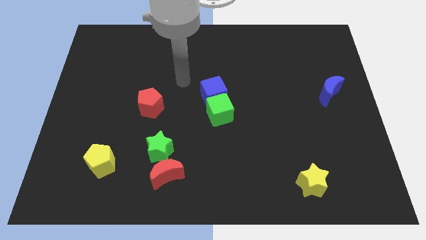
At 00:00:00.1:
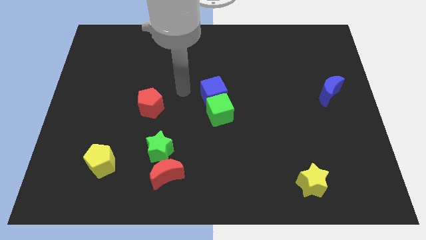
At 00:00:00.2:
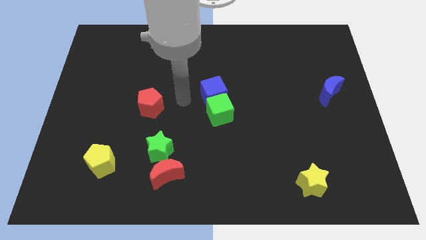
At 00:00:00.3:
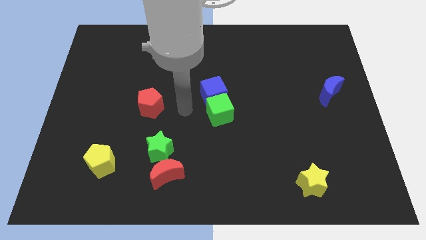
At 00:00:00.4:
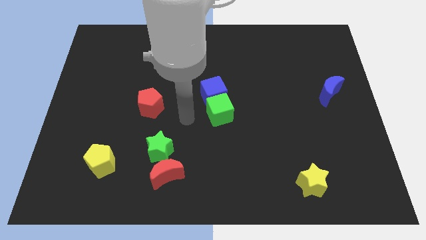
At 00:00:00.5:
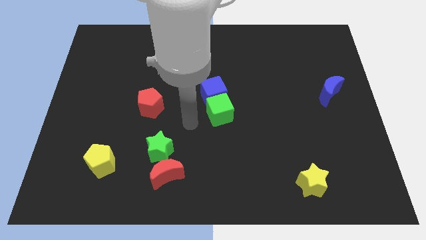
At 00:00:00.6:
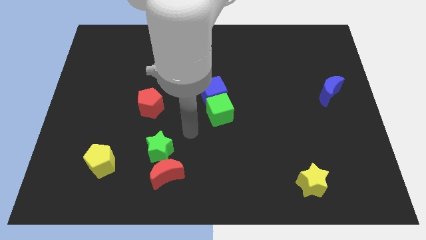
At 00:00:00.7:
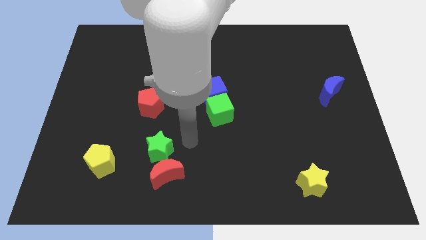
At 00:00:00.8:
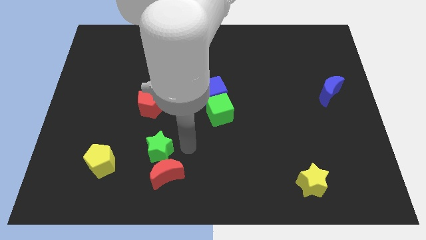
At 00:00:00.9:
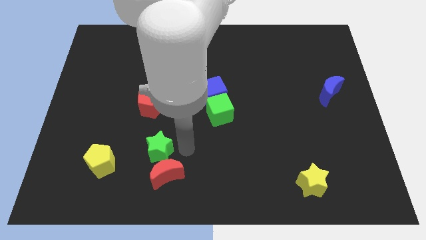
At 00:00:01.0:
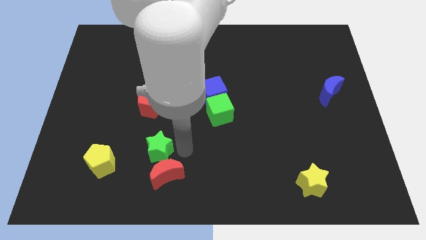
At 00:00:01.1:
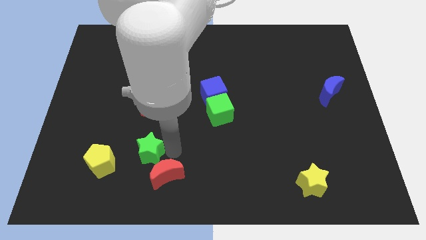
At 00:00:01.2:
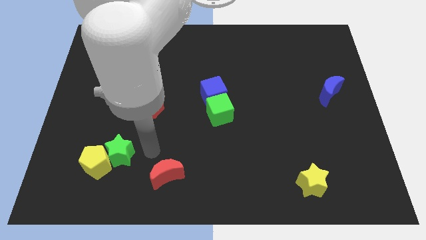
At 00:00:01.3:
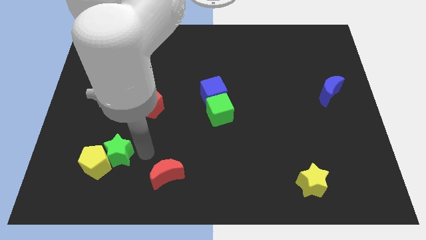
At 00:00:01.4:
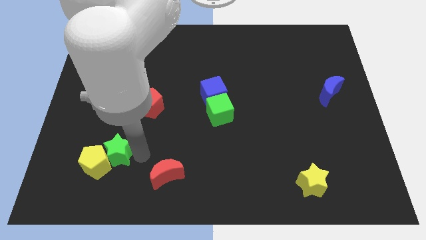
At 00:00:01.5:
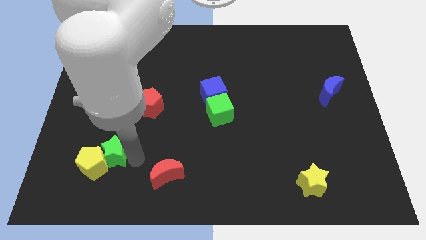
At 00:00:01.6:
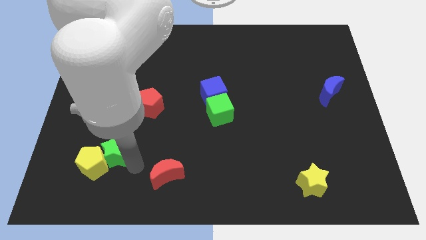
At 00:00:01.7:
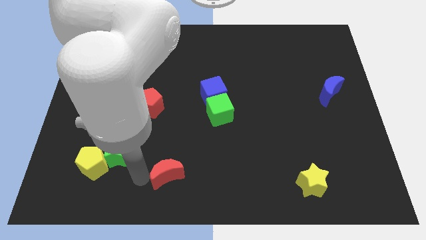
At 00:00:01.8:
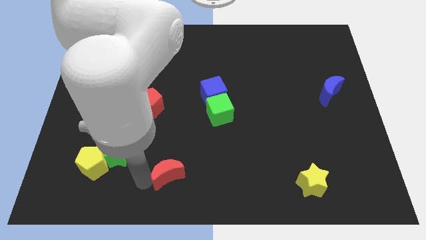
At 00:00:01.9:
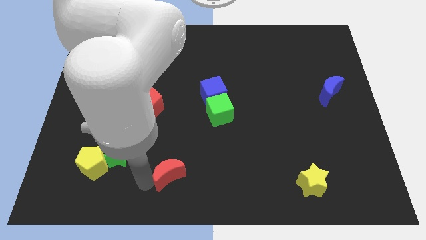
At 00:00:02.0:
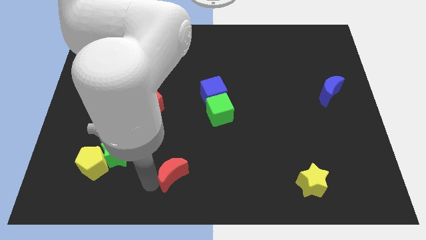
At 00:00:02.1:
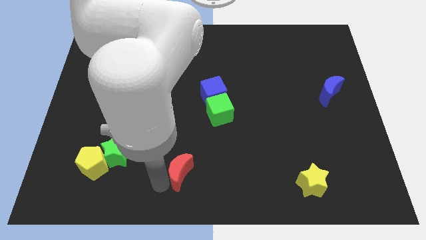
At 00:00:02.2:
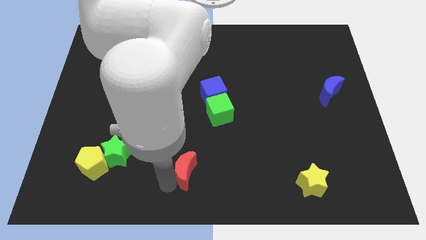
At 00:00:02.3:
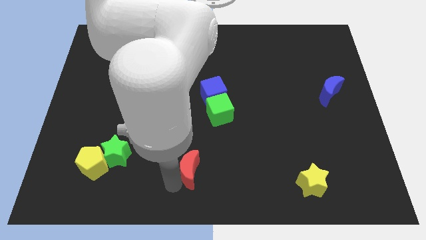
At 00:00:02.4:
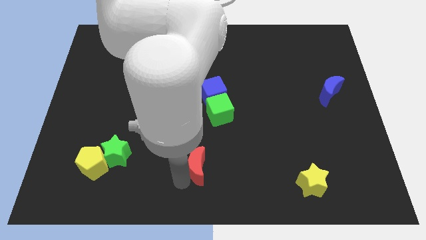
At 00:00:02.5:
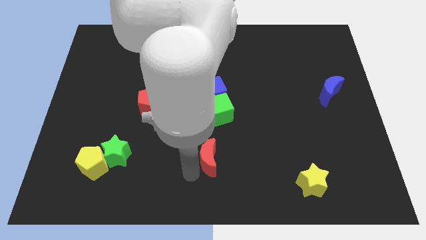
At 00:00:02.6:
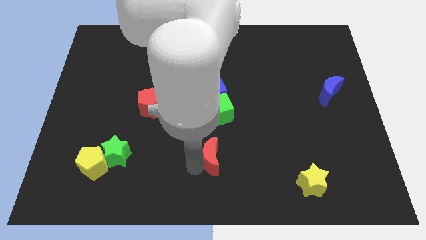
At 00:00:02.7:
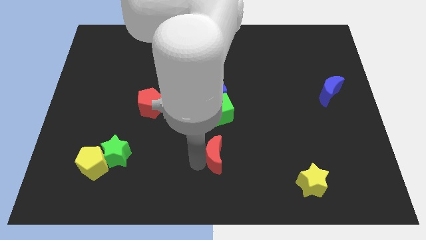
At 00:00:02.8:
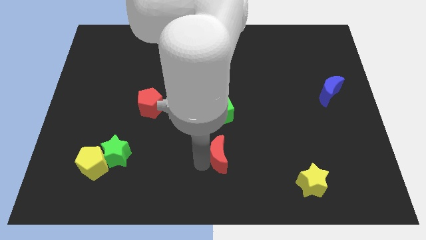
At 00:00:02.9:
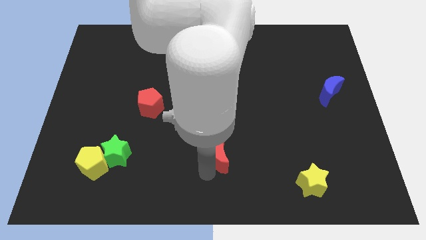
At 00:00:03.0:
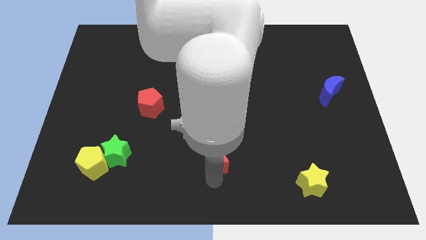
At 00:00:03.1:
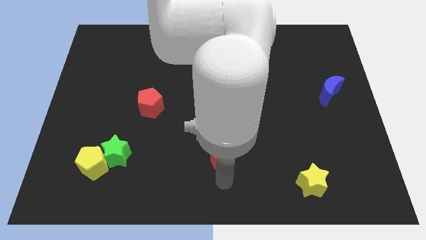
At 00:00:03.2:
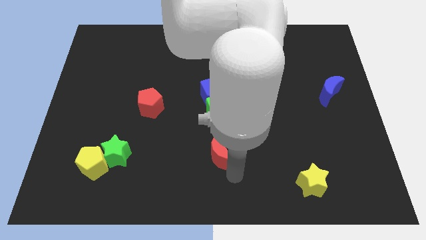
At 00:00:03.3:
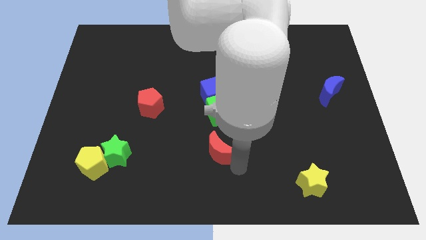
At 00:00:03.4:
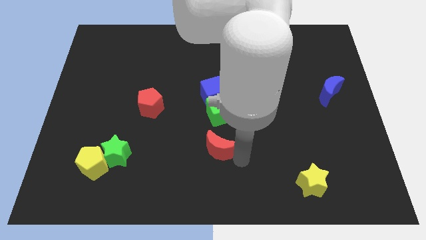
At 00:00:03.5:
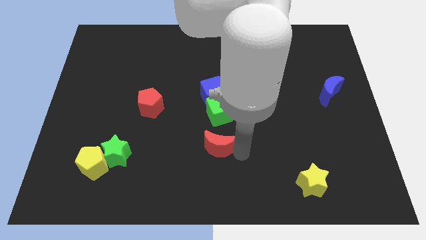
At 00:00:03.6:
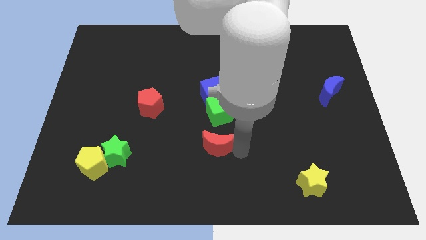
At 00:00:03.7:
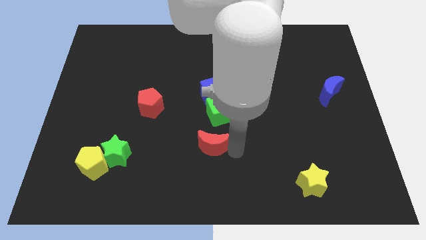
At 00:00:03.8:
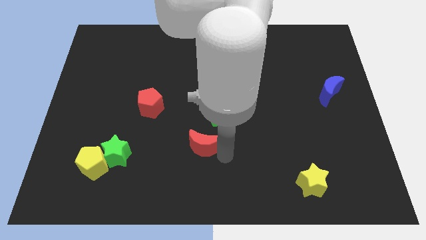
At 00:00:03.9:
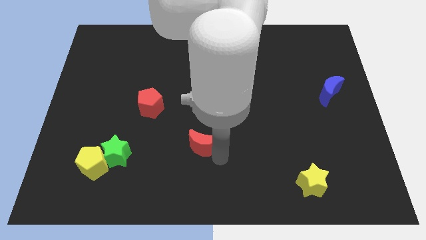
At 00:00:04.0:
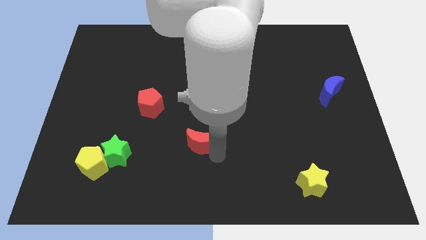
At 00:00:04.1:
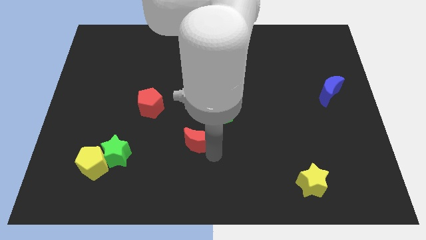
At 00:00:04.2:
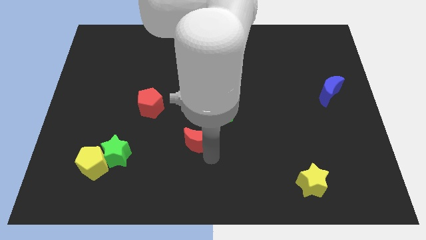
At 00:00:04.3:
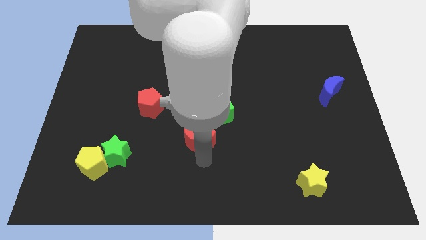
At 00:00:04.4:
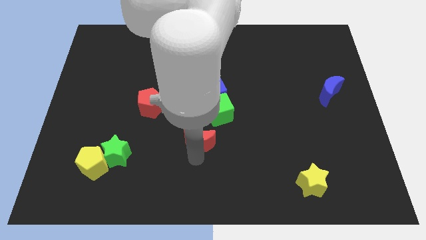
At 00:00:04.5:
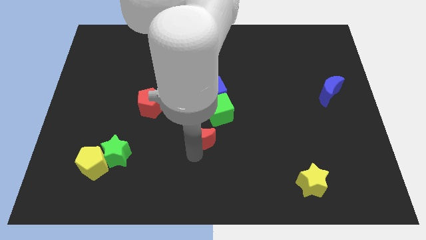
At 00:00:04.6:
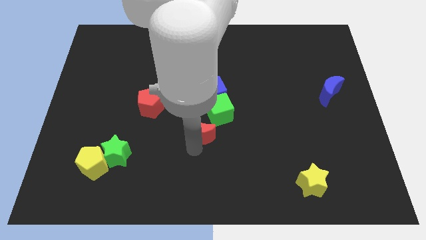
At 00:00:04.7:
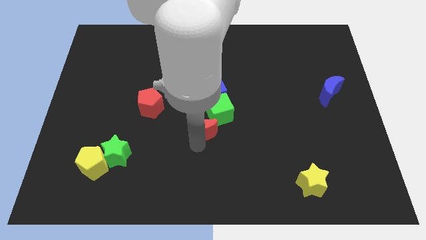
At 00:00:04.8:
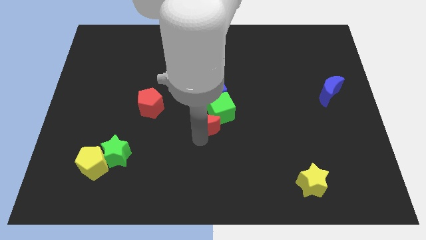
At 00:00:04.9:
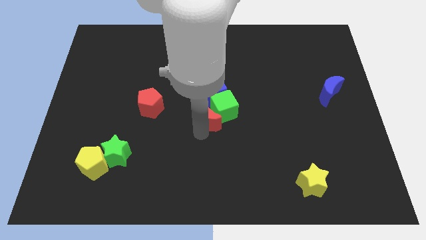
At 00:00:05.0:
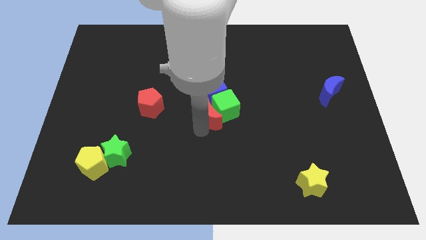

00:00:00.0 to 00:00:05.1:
push the red moon close to the green cube

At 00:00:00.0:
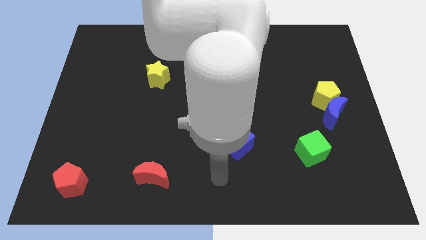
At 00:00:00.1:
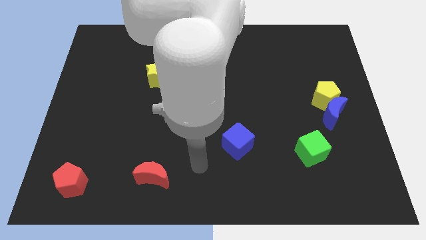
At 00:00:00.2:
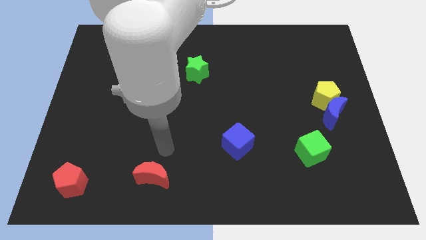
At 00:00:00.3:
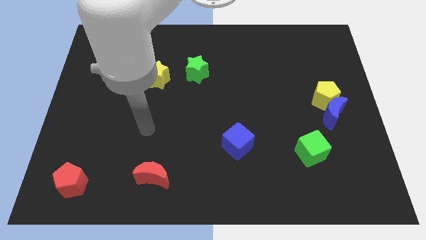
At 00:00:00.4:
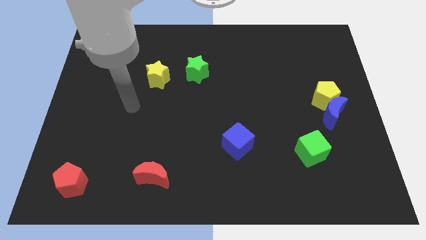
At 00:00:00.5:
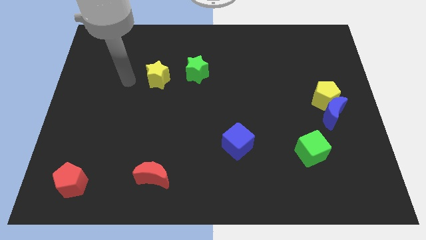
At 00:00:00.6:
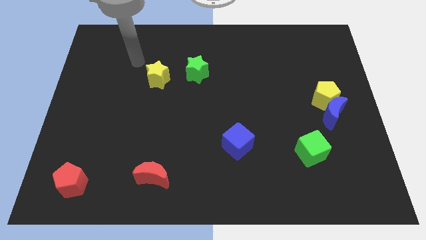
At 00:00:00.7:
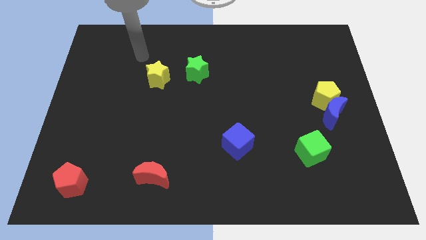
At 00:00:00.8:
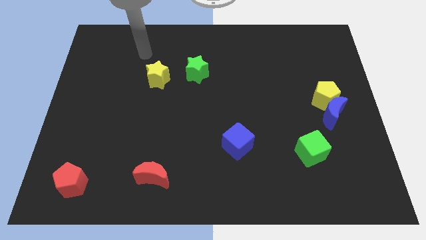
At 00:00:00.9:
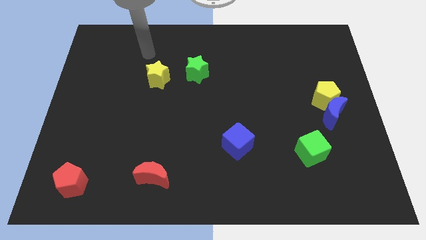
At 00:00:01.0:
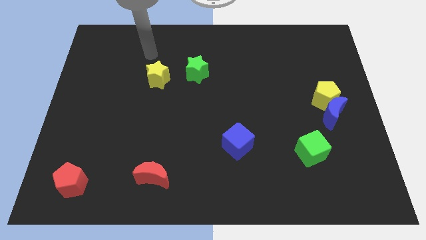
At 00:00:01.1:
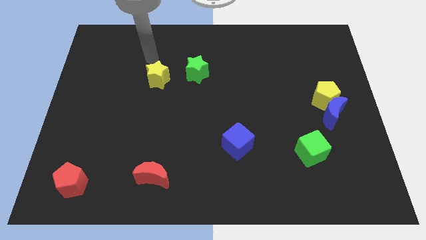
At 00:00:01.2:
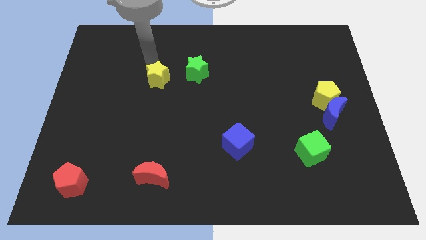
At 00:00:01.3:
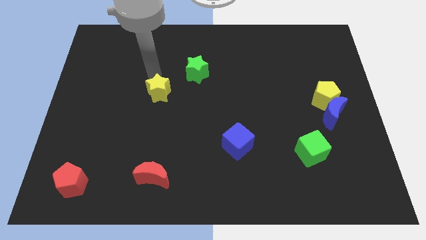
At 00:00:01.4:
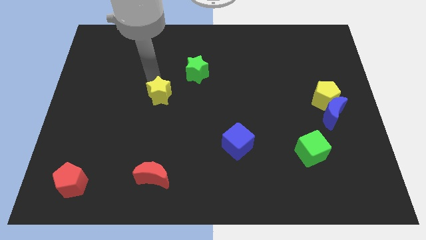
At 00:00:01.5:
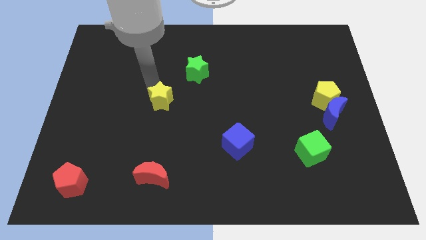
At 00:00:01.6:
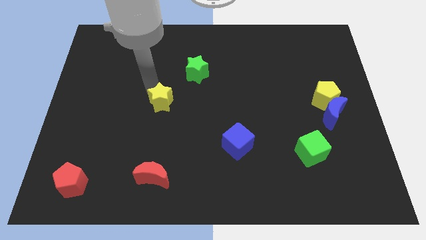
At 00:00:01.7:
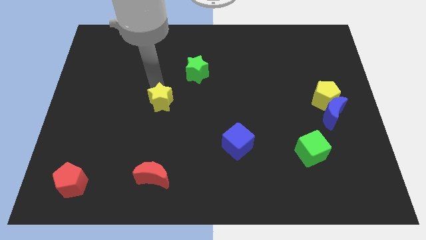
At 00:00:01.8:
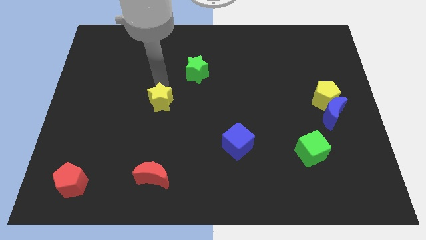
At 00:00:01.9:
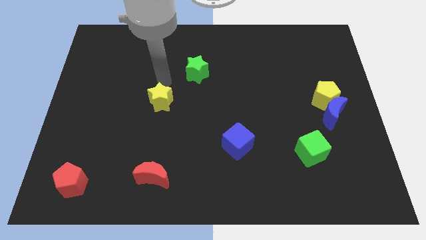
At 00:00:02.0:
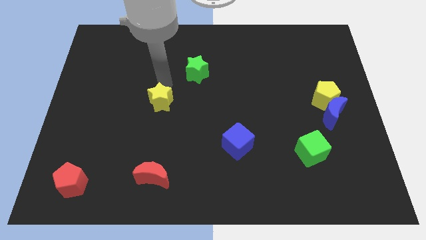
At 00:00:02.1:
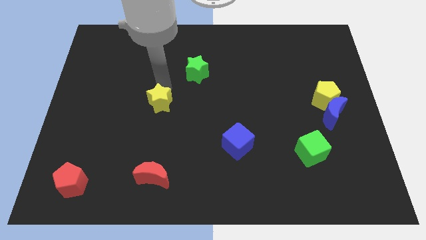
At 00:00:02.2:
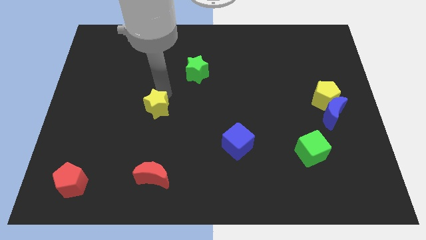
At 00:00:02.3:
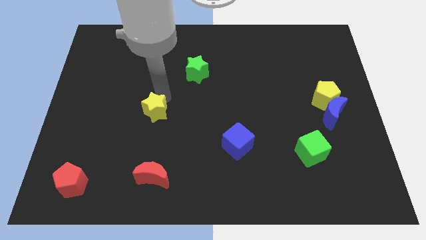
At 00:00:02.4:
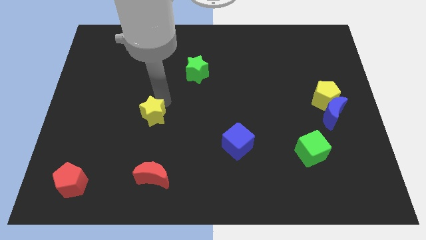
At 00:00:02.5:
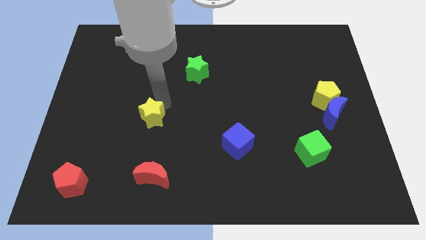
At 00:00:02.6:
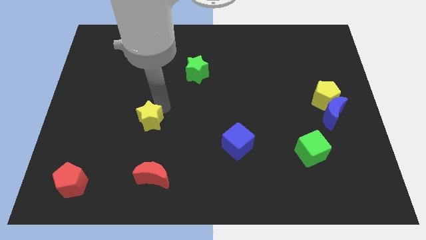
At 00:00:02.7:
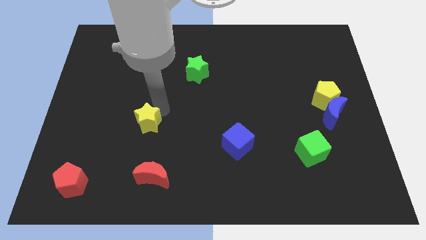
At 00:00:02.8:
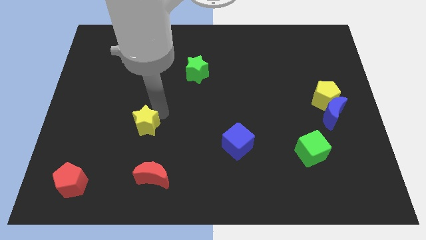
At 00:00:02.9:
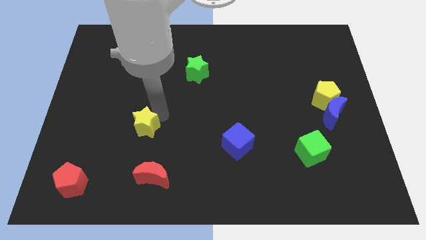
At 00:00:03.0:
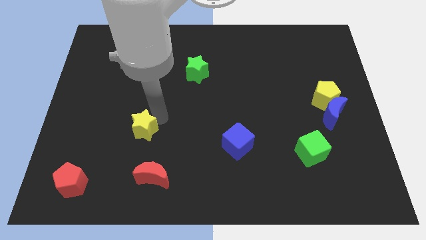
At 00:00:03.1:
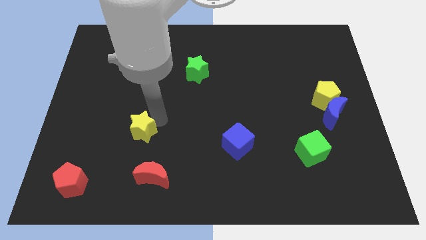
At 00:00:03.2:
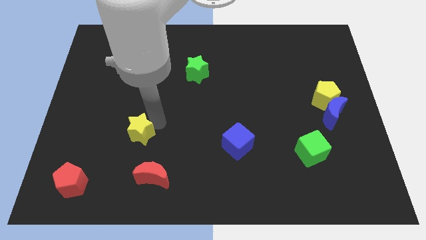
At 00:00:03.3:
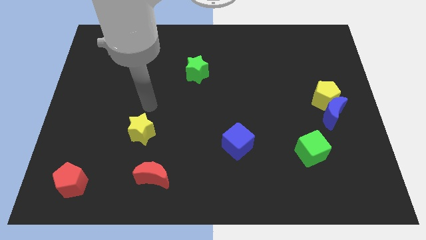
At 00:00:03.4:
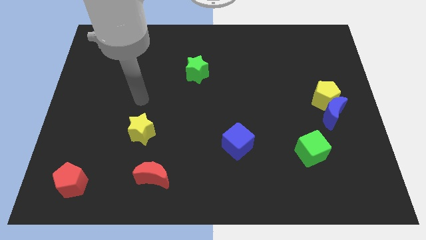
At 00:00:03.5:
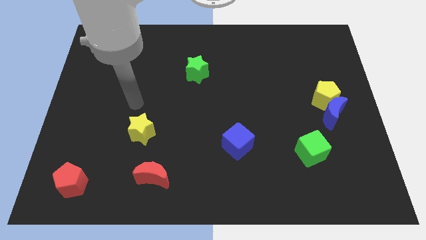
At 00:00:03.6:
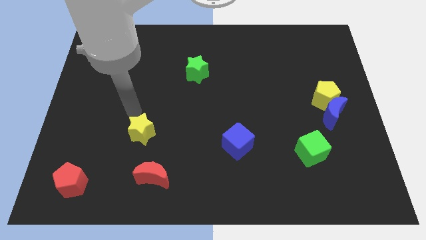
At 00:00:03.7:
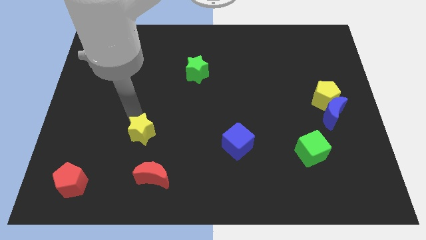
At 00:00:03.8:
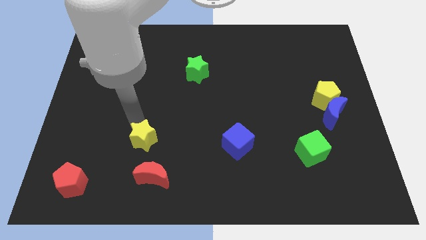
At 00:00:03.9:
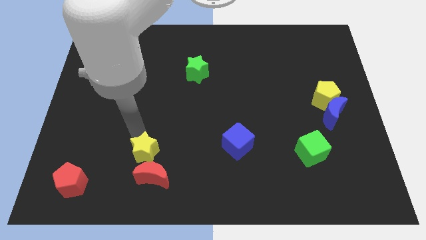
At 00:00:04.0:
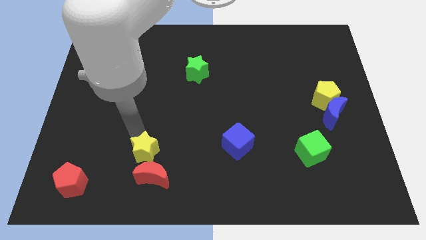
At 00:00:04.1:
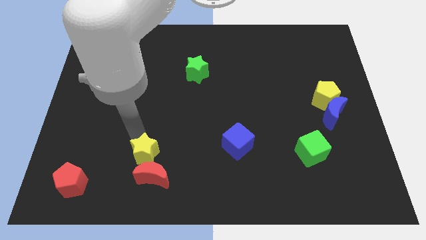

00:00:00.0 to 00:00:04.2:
slide the yellow star to the red moon
